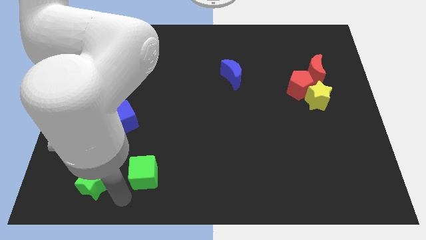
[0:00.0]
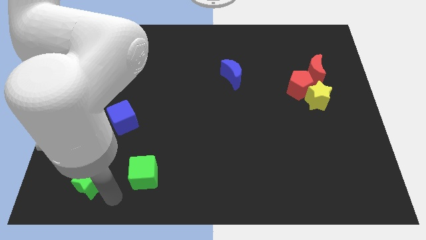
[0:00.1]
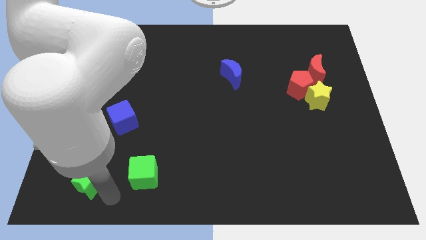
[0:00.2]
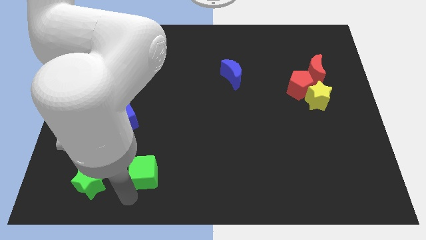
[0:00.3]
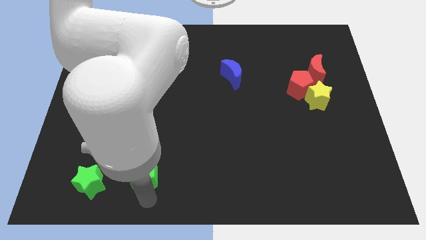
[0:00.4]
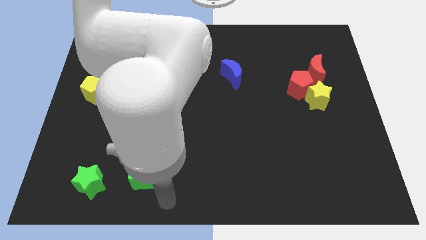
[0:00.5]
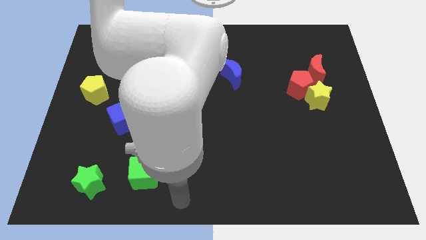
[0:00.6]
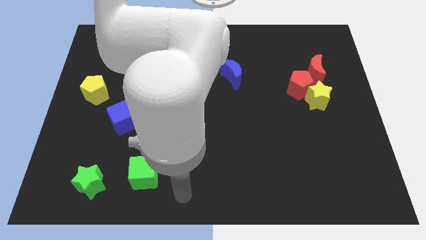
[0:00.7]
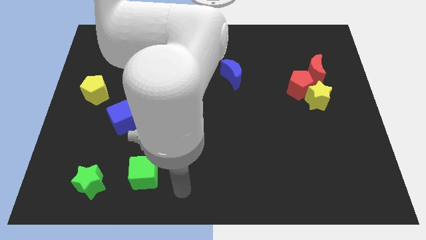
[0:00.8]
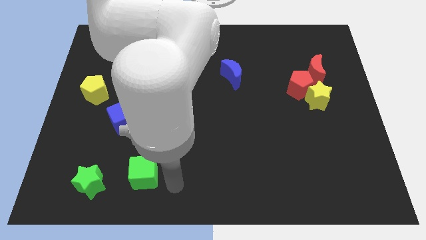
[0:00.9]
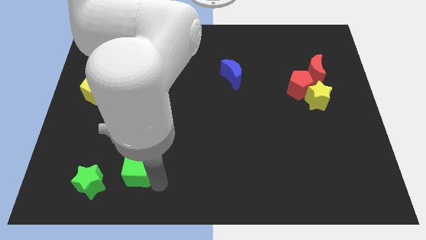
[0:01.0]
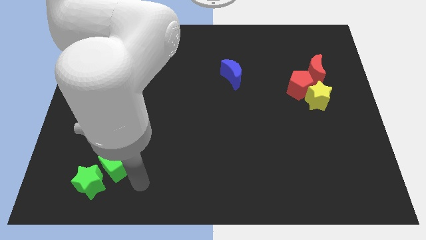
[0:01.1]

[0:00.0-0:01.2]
push green cube to the bottom of the blue cube

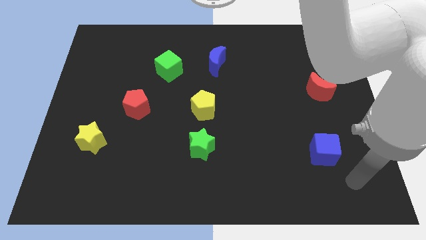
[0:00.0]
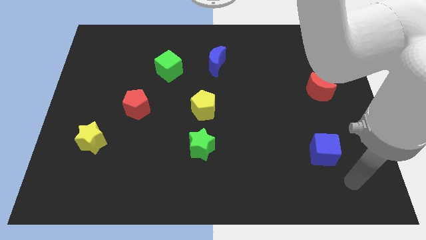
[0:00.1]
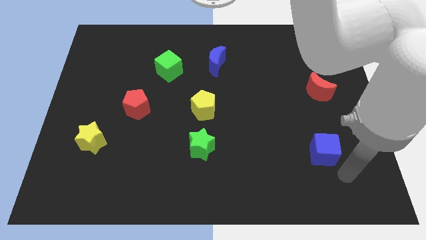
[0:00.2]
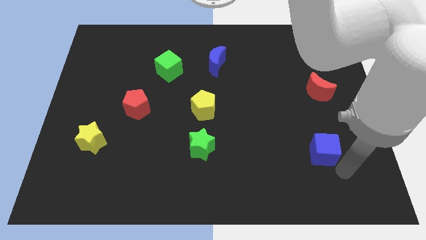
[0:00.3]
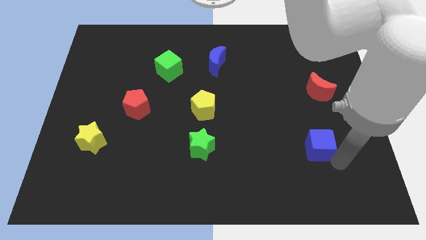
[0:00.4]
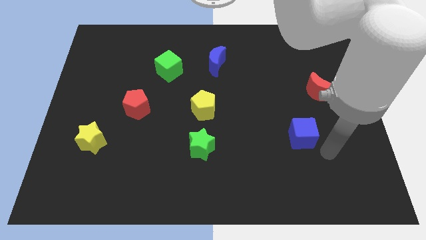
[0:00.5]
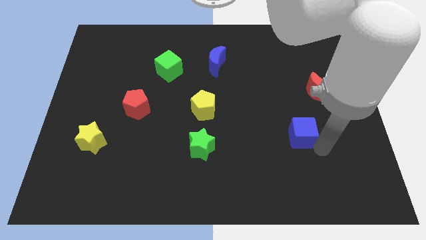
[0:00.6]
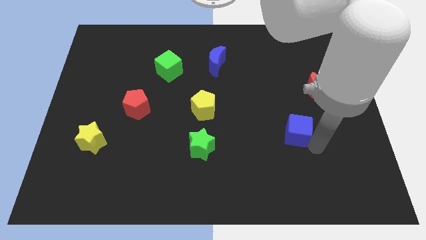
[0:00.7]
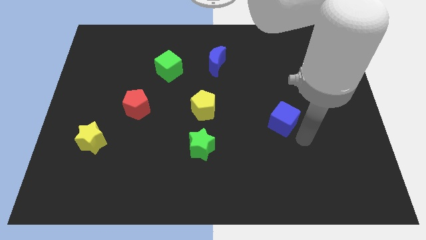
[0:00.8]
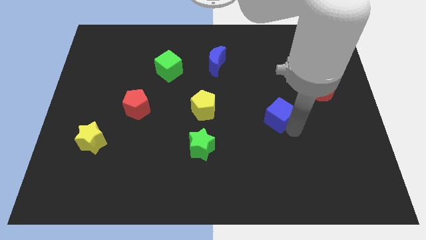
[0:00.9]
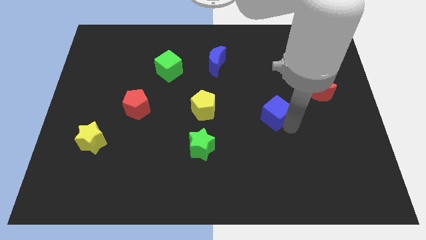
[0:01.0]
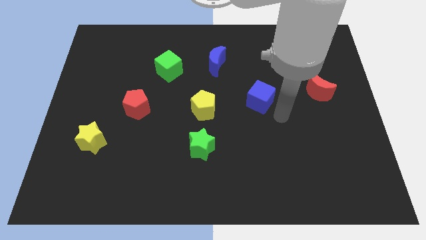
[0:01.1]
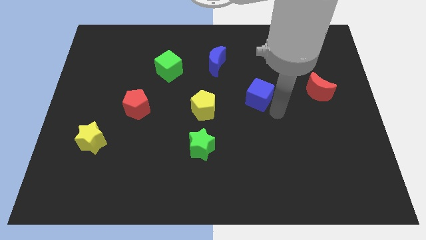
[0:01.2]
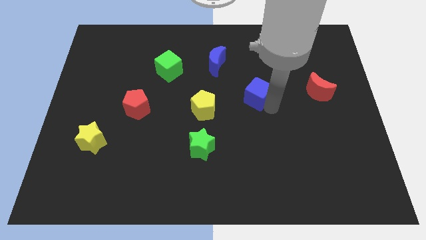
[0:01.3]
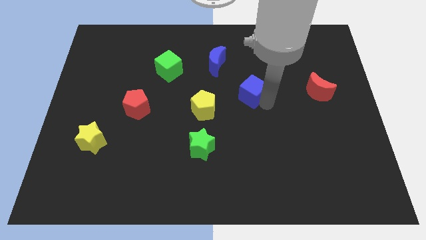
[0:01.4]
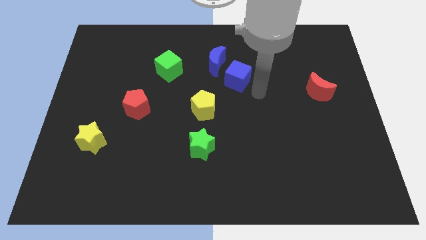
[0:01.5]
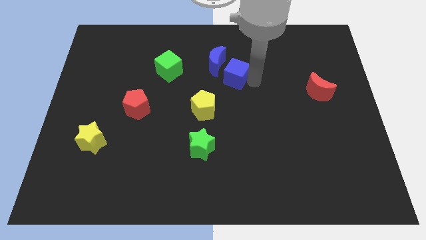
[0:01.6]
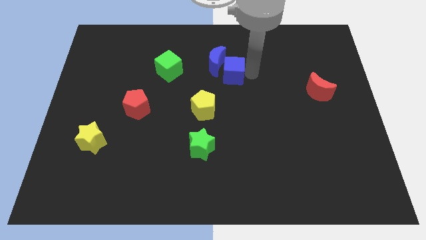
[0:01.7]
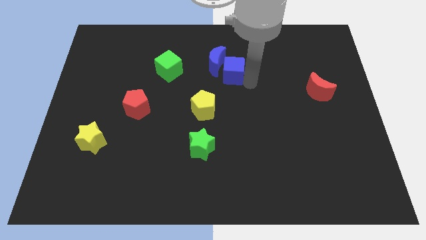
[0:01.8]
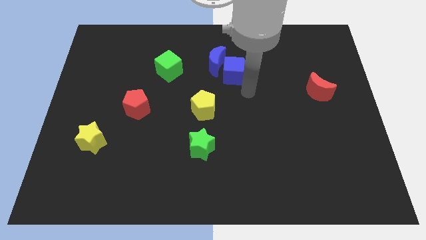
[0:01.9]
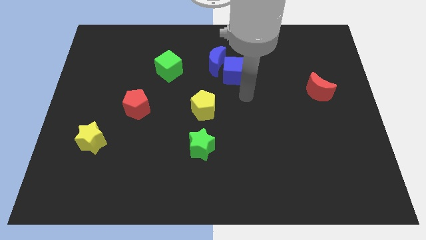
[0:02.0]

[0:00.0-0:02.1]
push the blue cube slightly towards the blue crescent

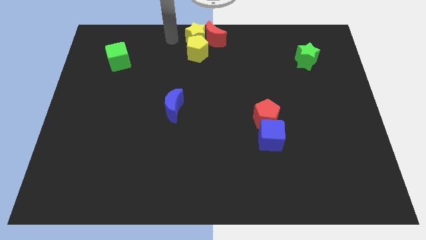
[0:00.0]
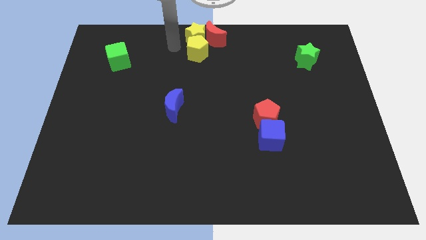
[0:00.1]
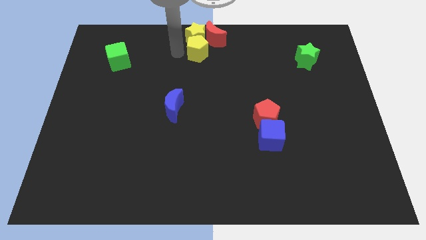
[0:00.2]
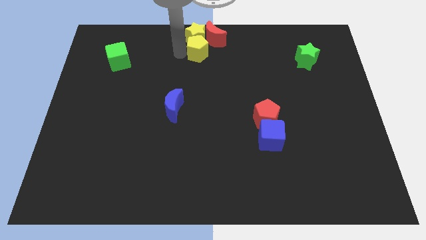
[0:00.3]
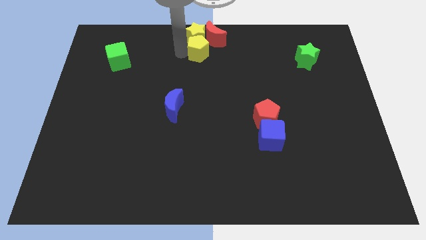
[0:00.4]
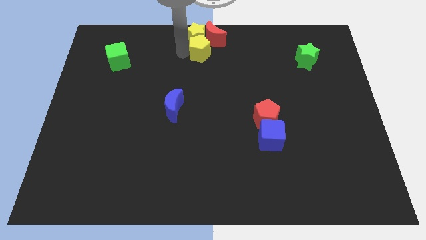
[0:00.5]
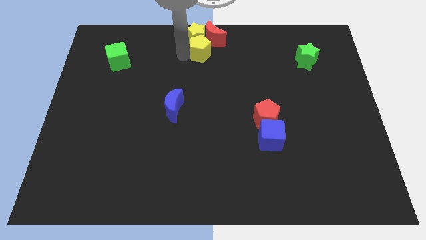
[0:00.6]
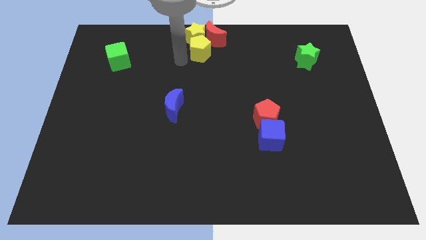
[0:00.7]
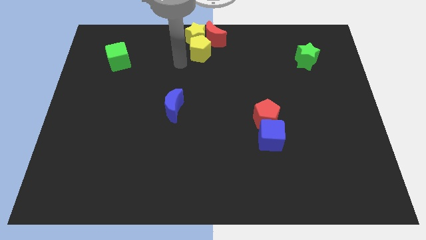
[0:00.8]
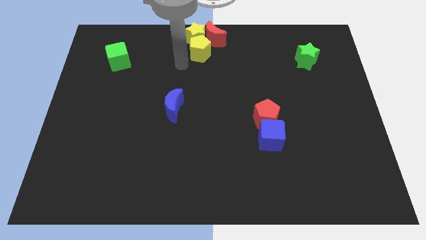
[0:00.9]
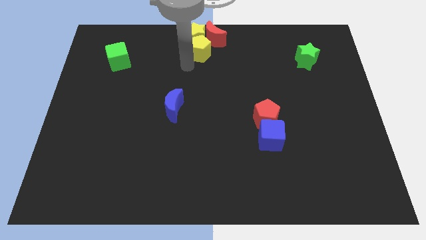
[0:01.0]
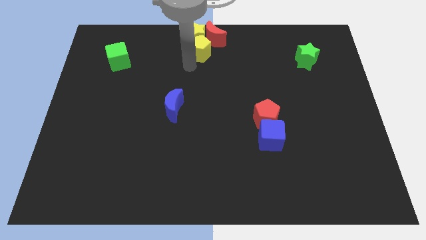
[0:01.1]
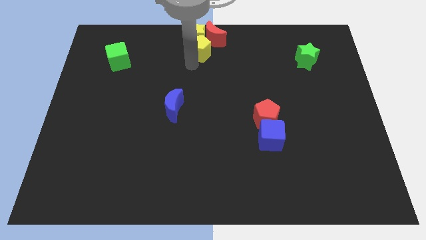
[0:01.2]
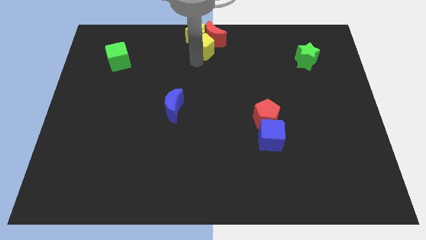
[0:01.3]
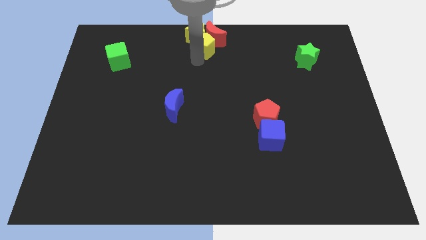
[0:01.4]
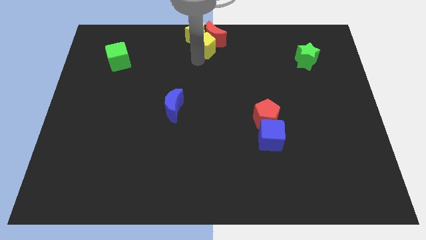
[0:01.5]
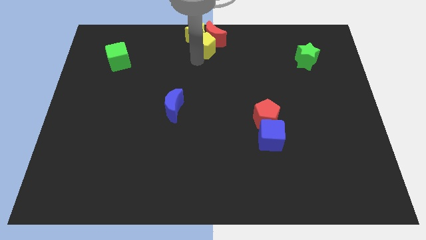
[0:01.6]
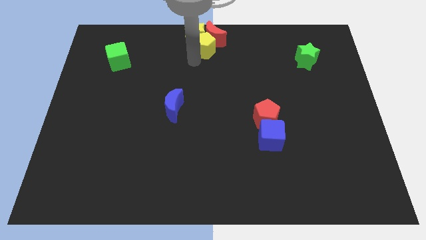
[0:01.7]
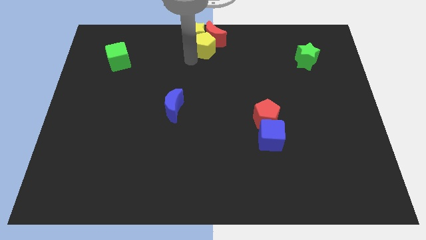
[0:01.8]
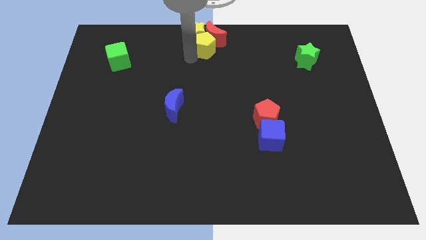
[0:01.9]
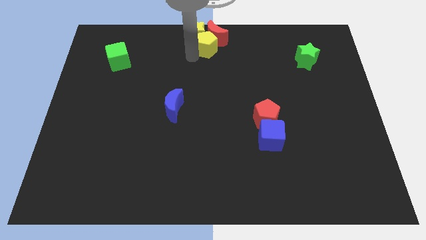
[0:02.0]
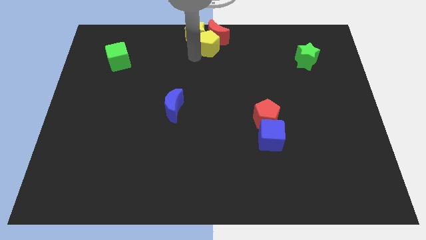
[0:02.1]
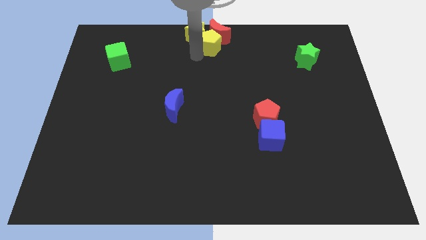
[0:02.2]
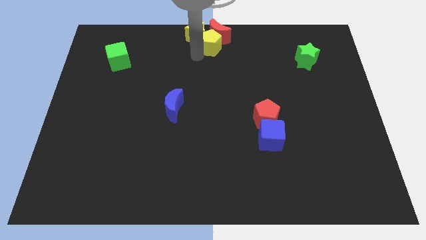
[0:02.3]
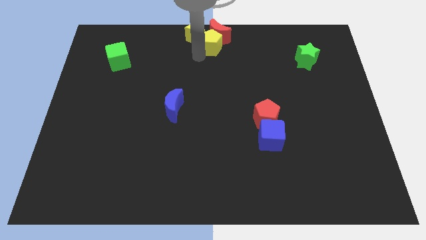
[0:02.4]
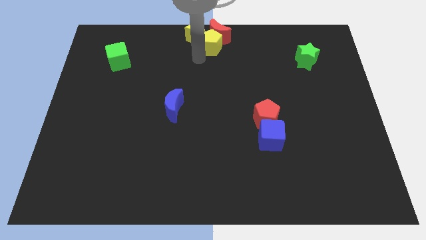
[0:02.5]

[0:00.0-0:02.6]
slightly move the yellow pentagon towards the top center of the board

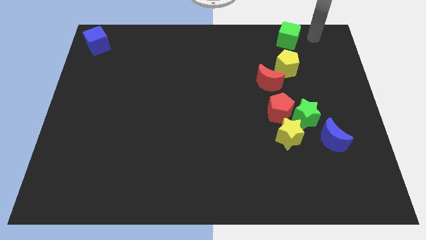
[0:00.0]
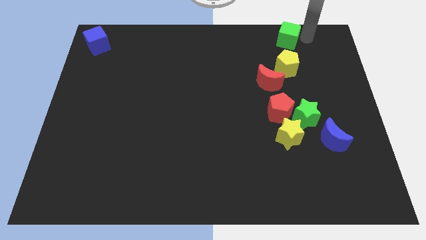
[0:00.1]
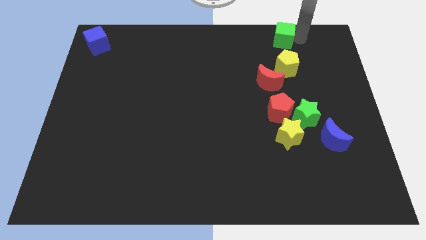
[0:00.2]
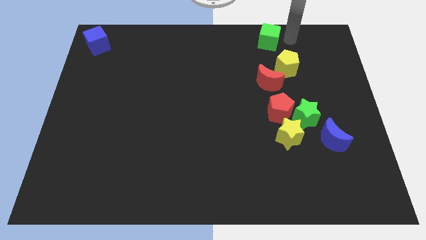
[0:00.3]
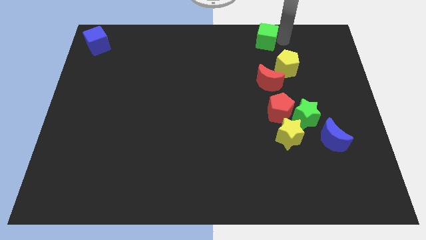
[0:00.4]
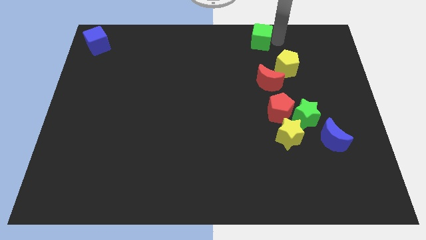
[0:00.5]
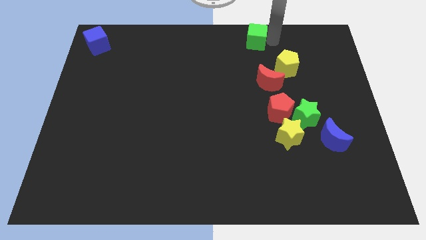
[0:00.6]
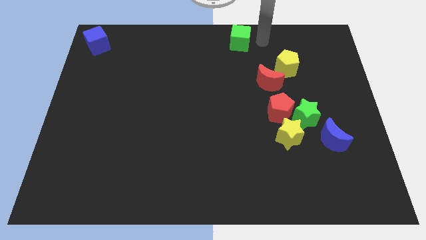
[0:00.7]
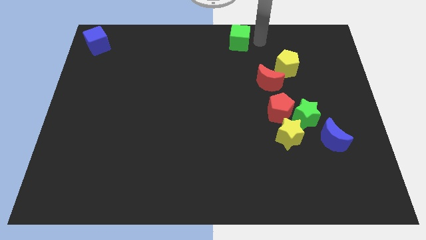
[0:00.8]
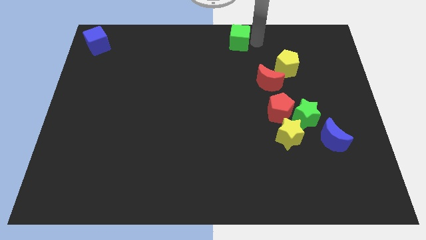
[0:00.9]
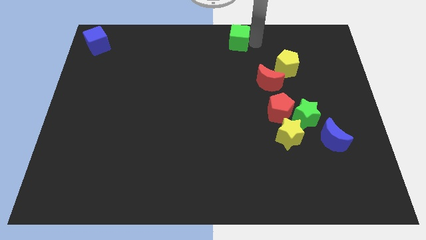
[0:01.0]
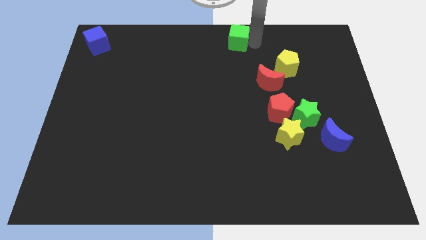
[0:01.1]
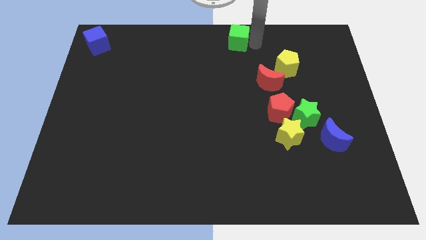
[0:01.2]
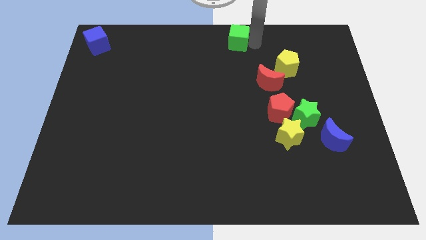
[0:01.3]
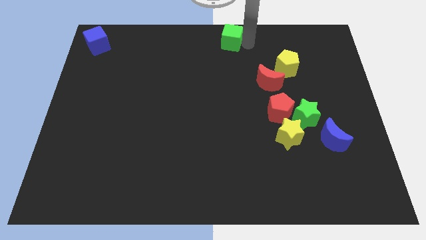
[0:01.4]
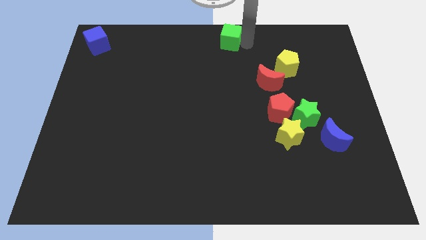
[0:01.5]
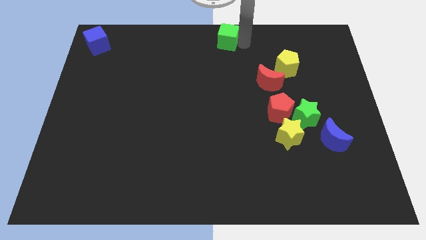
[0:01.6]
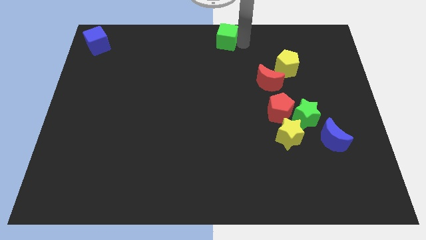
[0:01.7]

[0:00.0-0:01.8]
move green cube slightly to the left side of the board

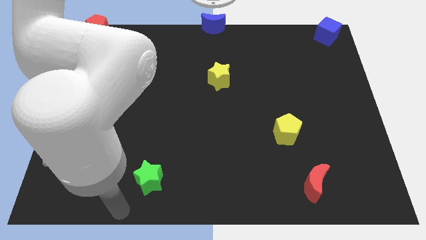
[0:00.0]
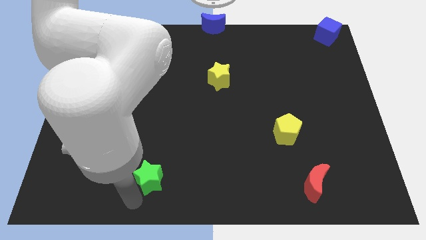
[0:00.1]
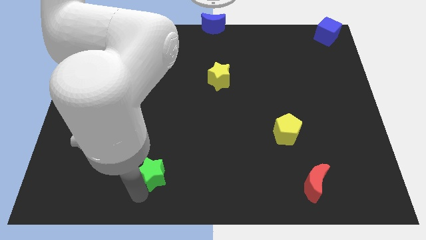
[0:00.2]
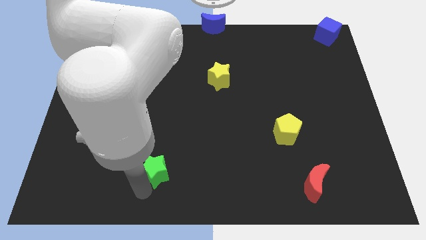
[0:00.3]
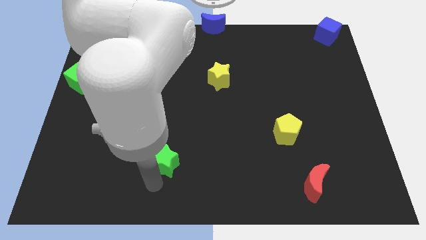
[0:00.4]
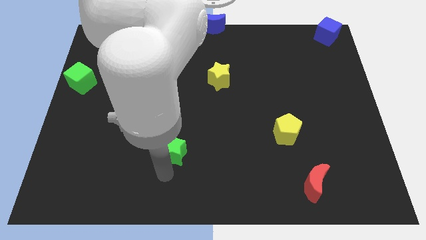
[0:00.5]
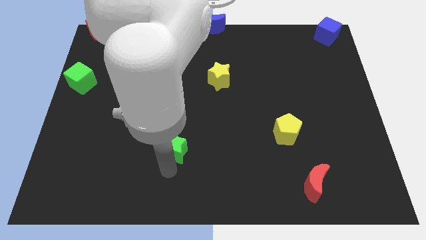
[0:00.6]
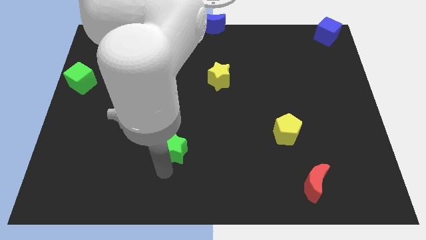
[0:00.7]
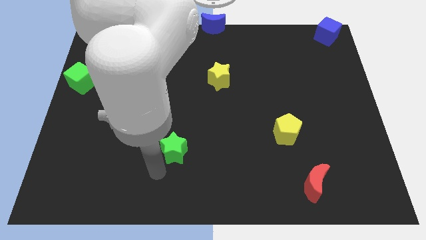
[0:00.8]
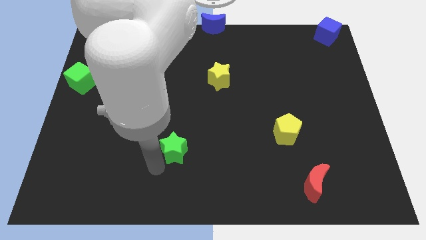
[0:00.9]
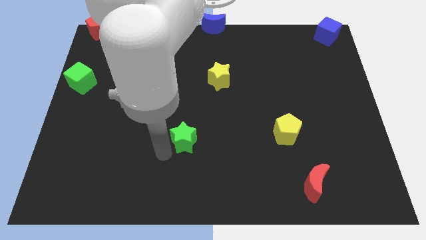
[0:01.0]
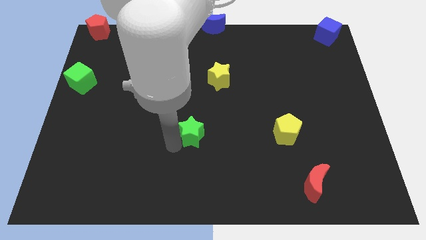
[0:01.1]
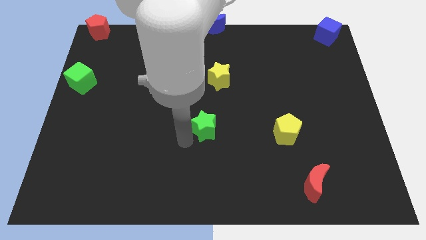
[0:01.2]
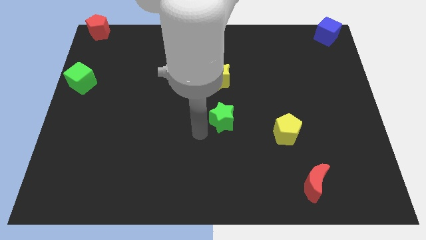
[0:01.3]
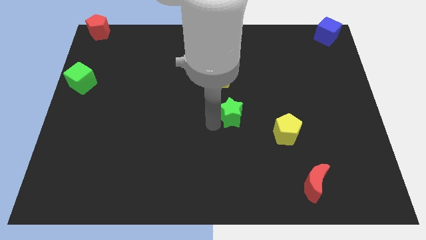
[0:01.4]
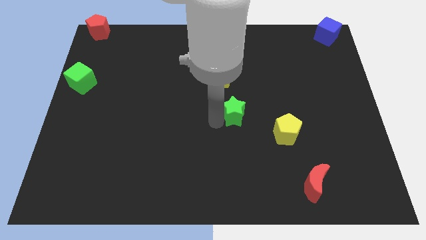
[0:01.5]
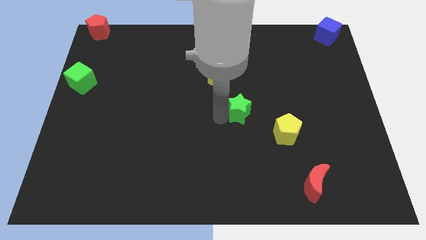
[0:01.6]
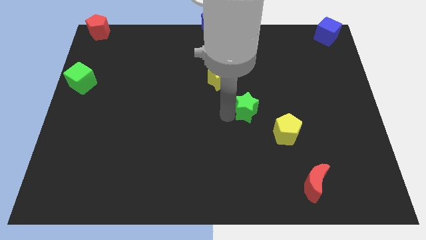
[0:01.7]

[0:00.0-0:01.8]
put the green star in between the yellow star and yellow pentagon
